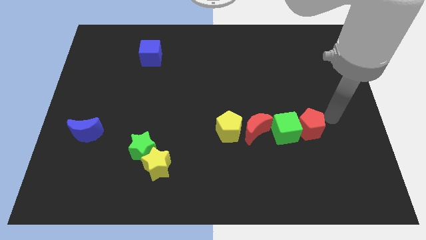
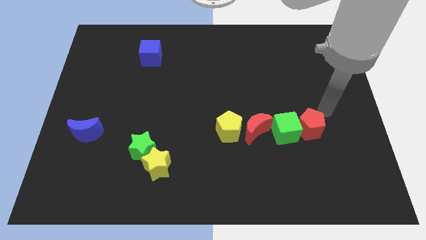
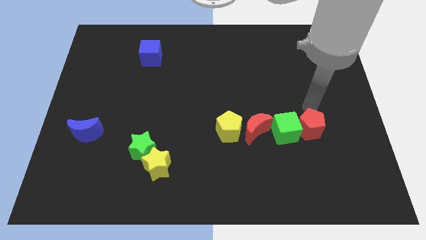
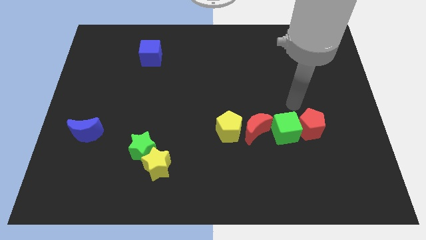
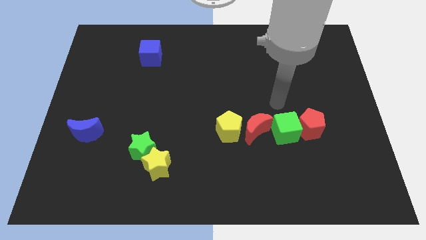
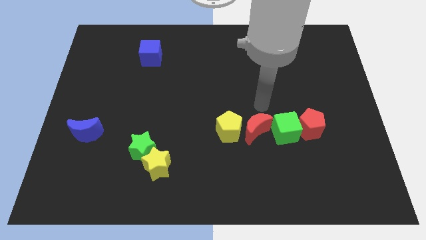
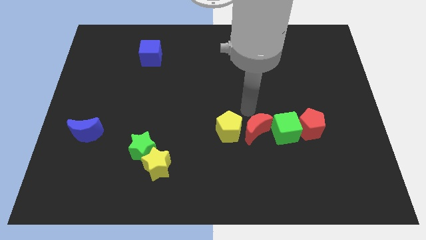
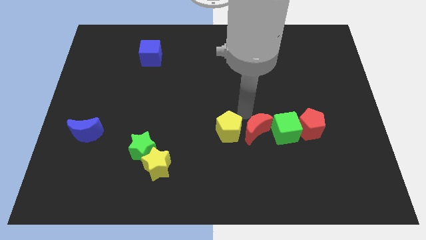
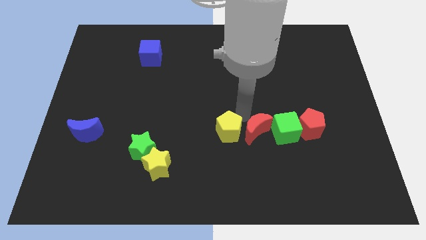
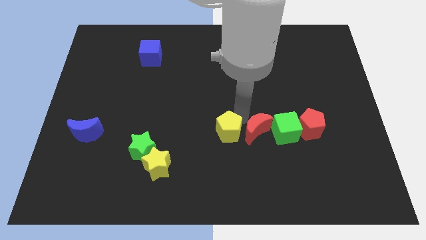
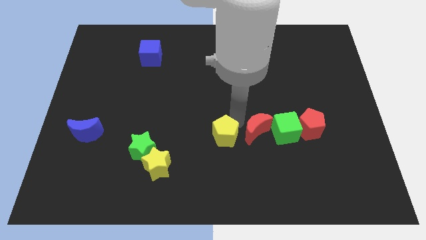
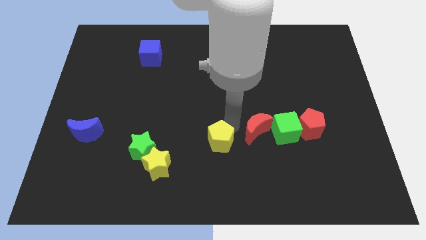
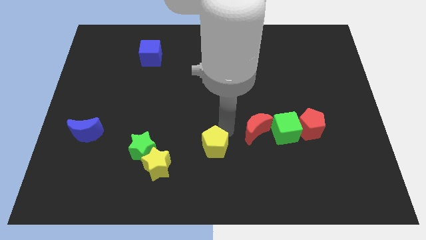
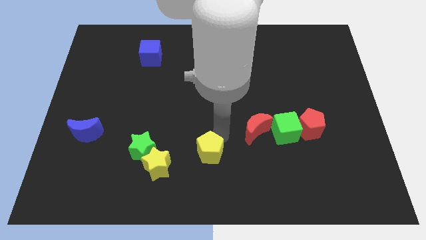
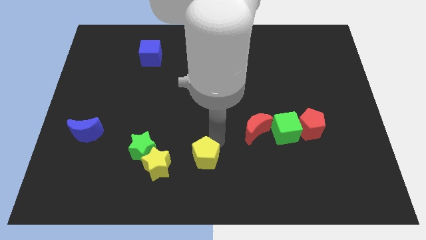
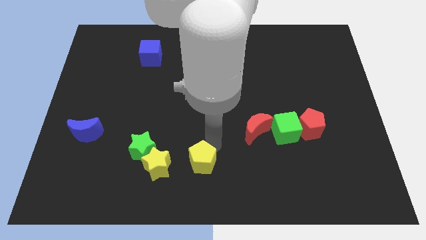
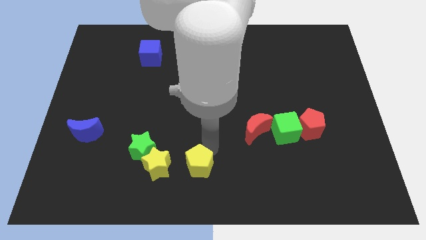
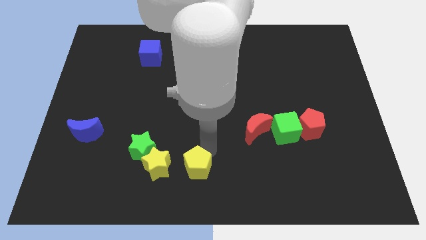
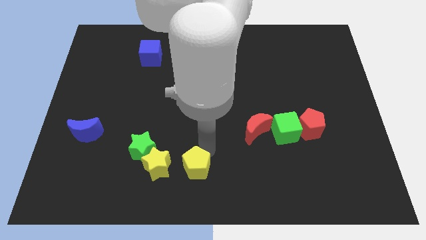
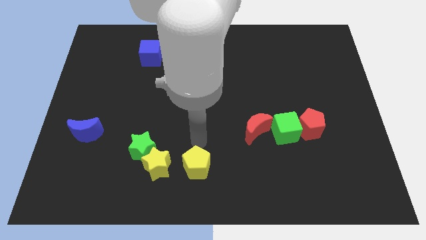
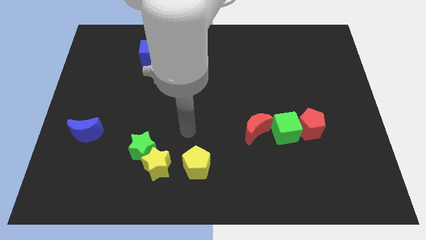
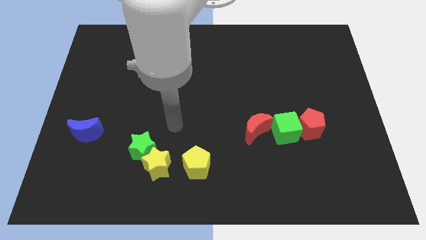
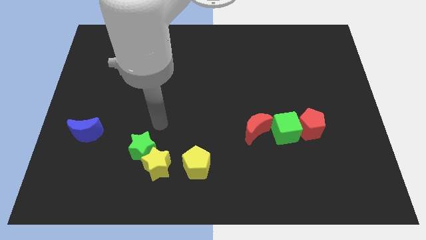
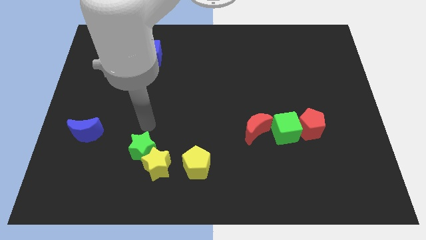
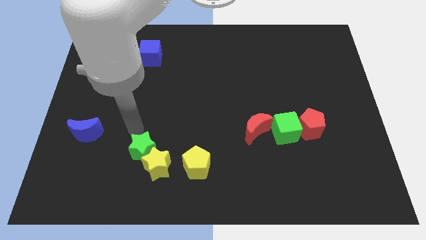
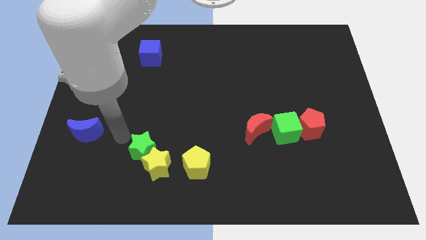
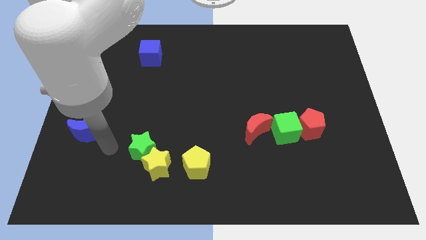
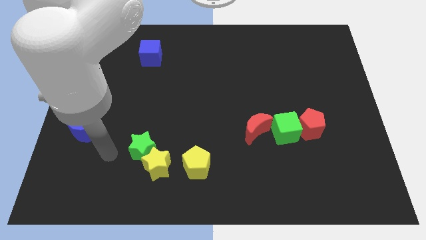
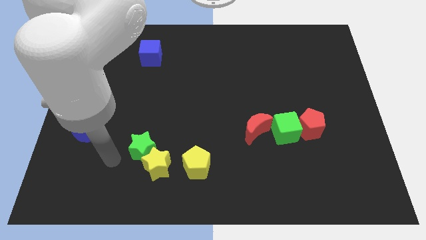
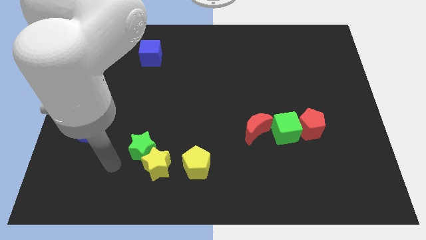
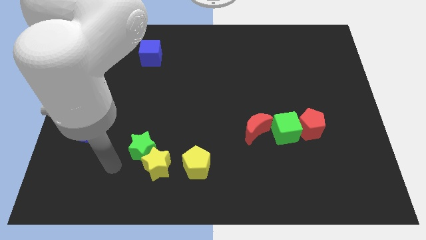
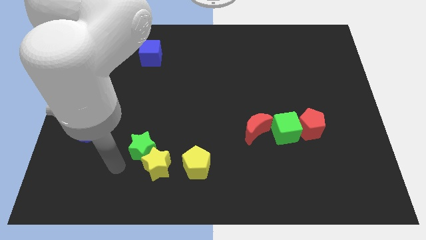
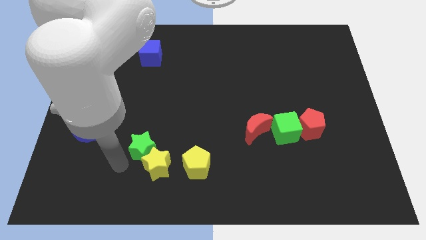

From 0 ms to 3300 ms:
move the yellow pentagon to the right side of the yellow star

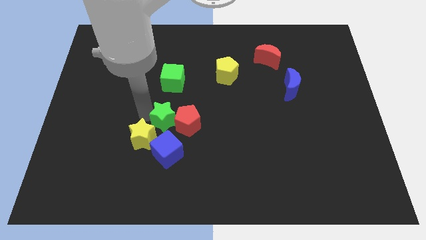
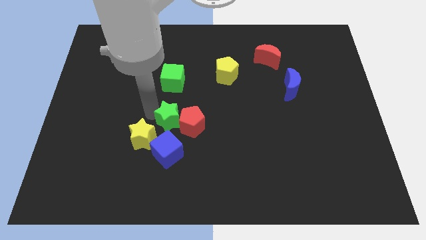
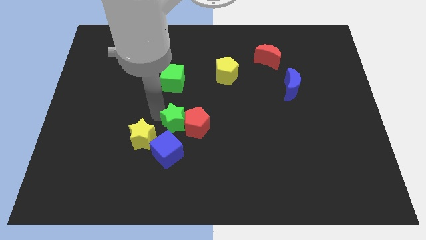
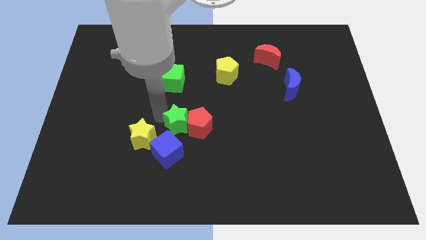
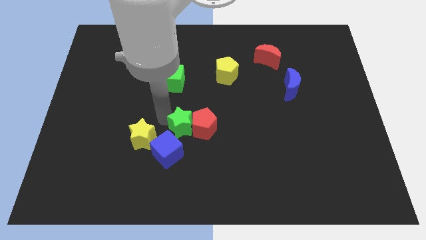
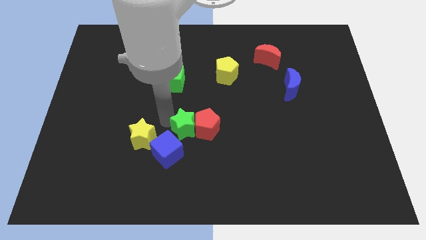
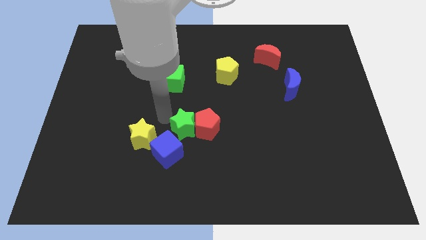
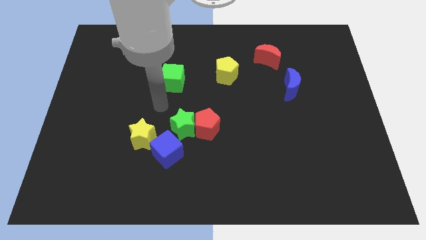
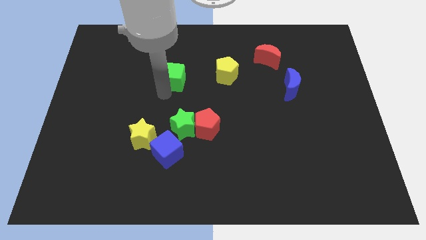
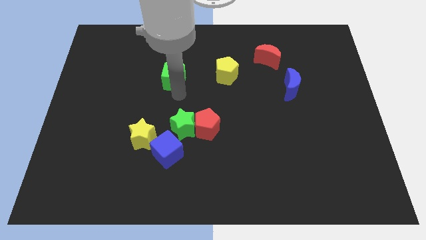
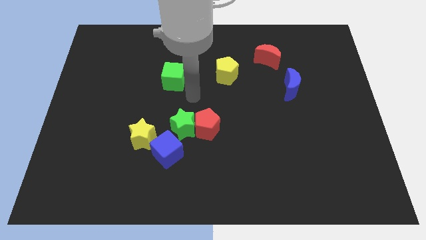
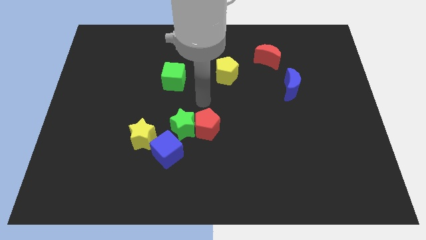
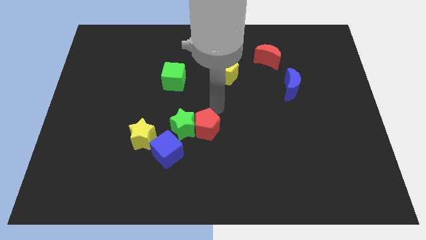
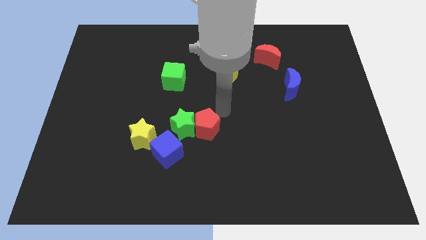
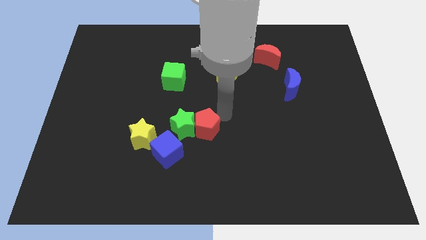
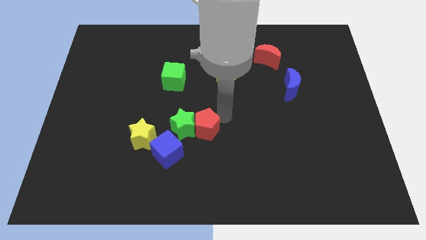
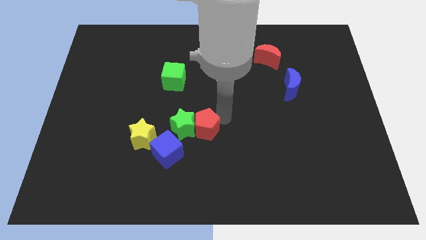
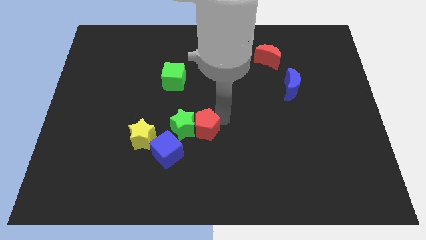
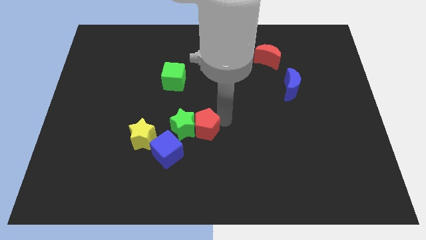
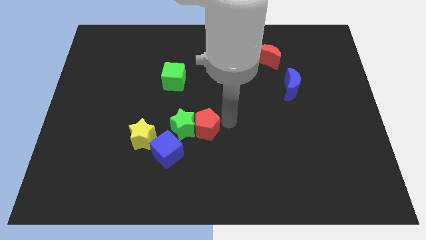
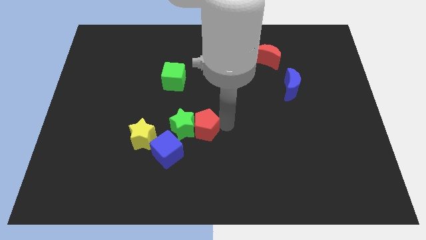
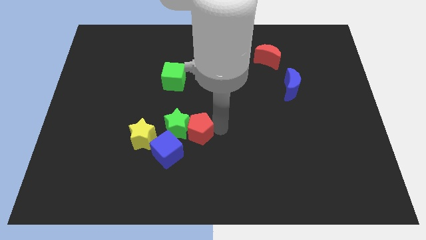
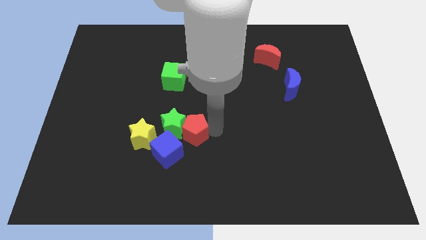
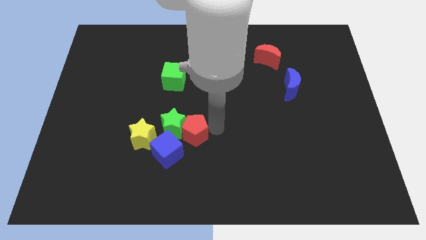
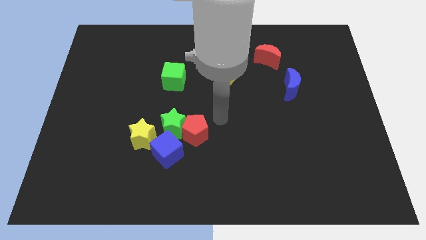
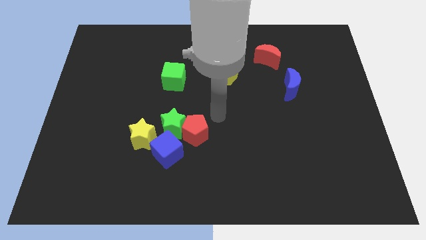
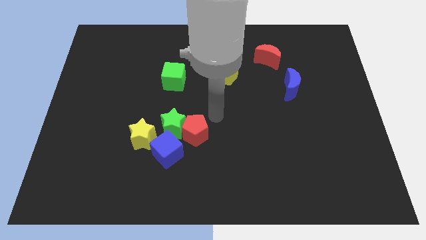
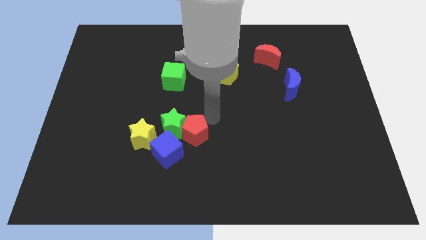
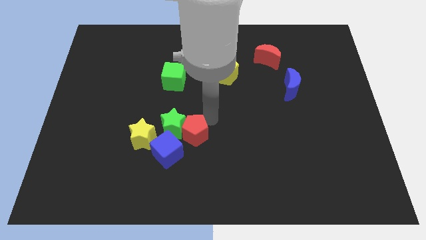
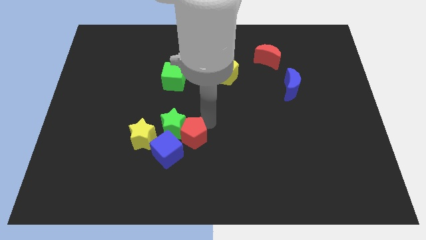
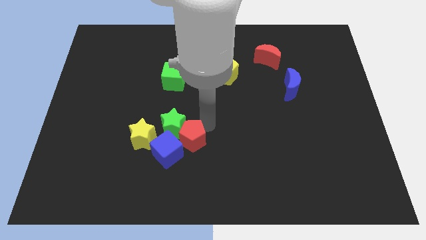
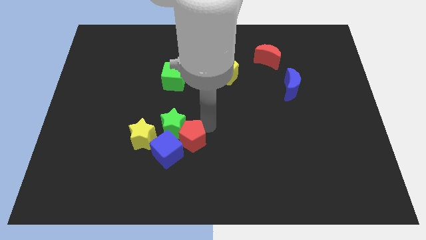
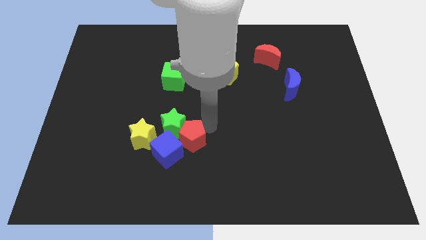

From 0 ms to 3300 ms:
adjust the green star and red petagon at the top right side of the yellow star and blue cube

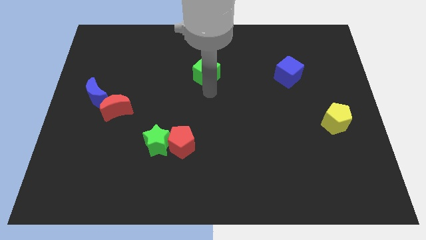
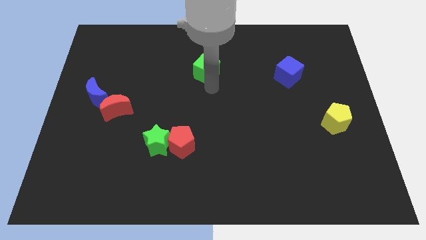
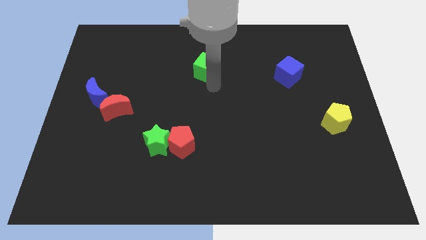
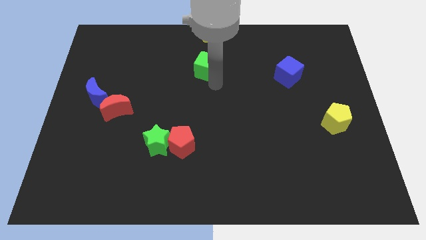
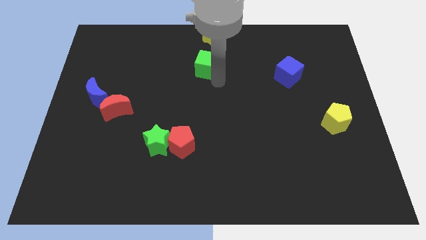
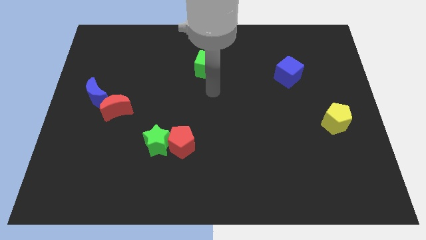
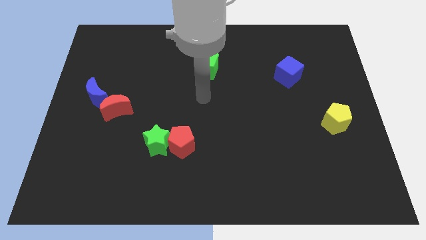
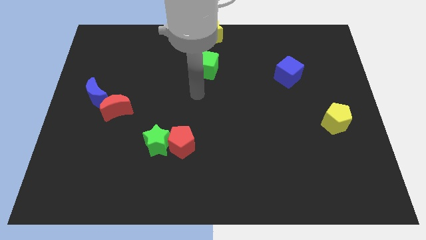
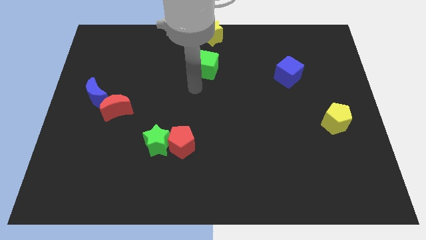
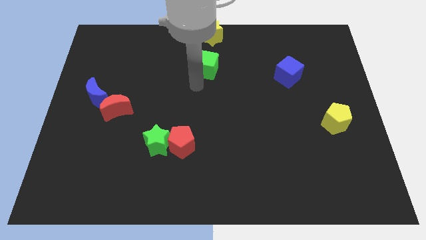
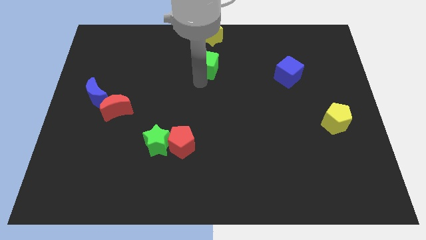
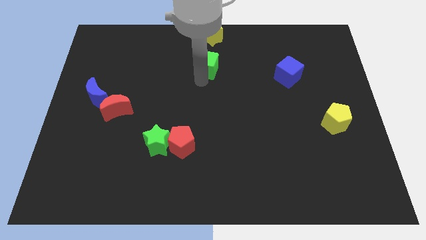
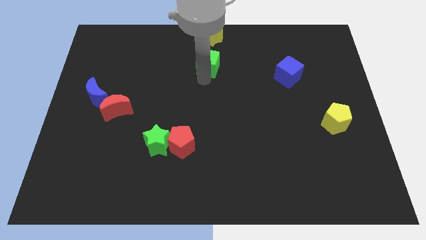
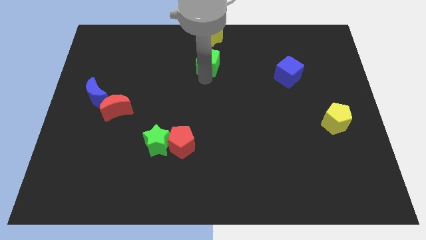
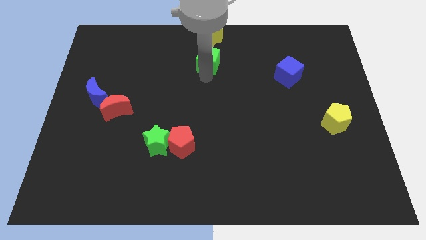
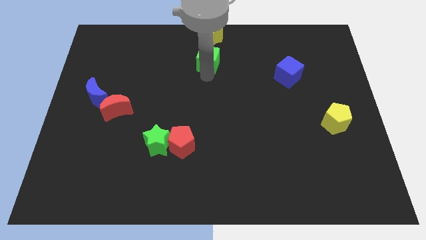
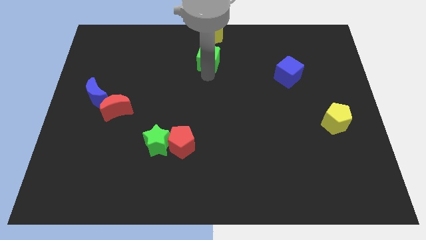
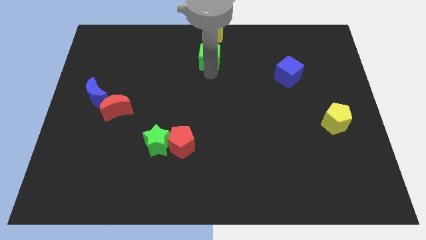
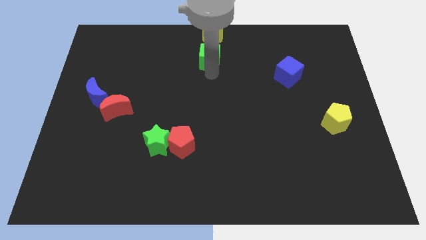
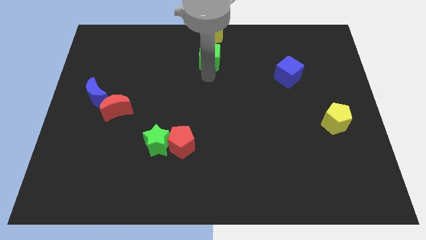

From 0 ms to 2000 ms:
place the green cube below the yellow star

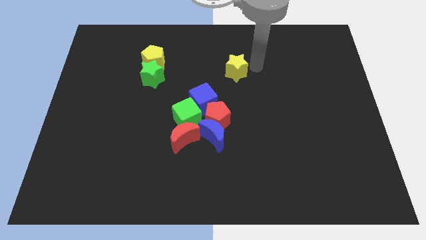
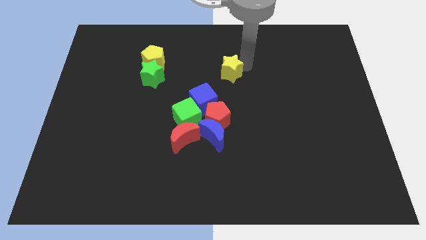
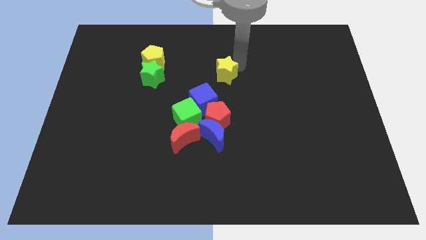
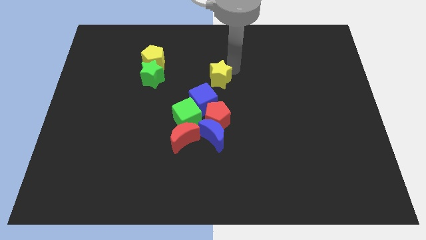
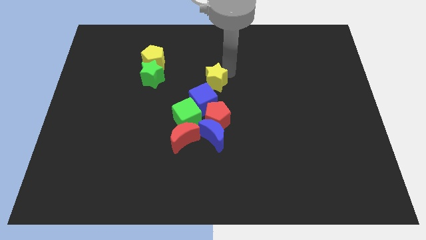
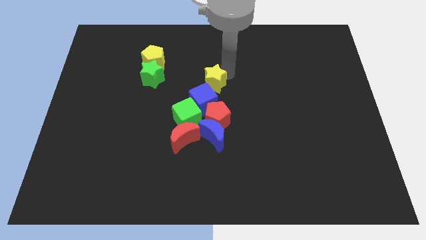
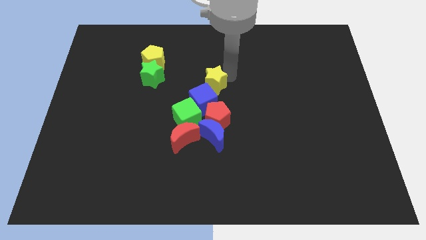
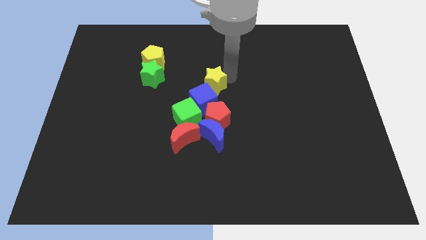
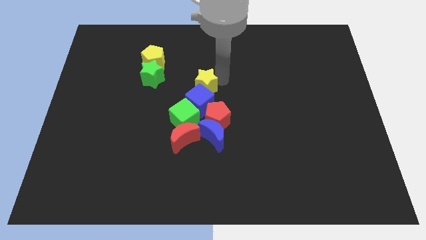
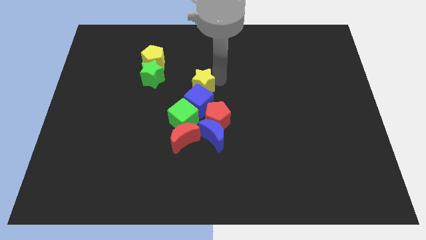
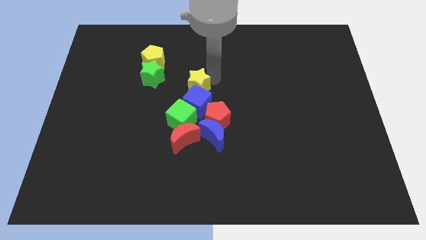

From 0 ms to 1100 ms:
push the yellow star into the blue cube
